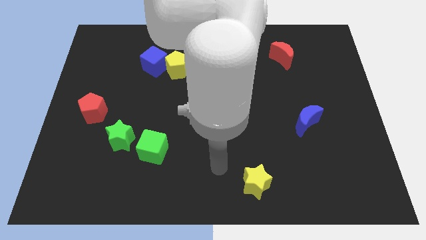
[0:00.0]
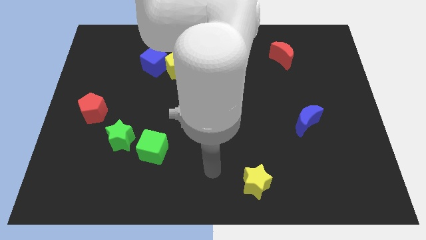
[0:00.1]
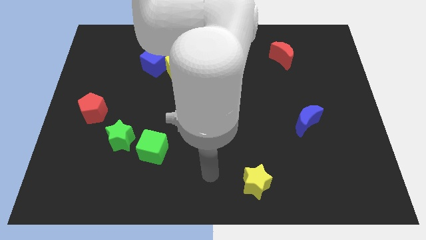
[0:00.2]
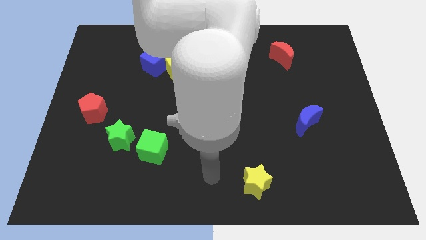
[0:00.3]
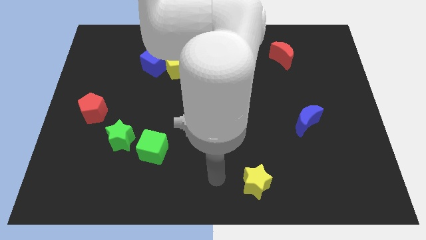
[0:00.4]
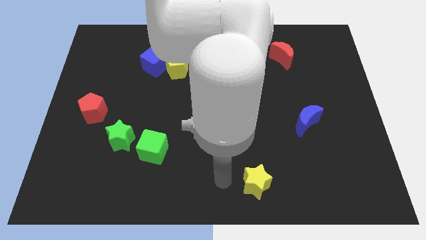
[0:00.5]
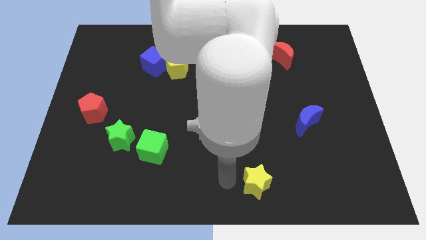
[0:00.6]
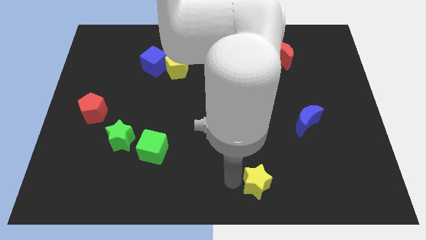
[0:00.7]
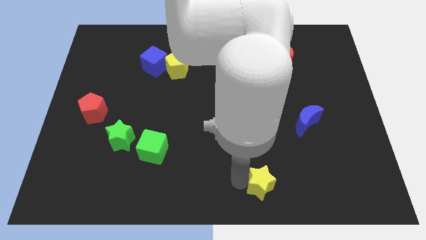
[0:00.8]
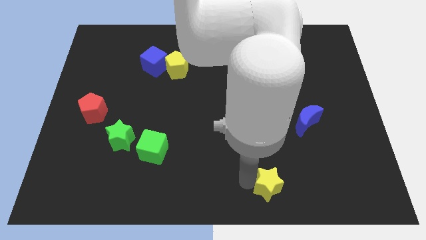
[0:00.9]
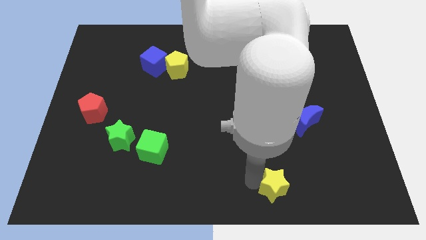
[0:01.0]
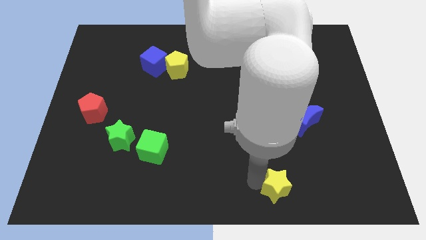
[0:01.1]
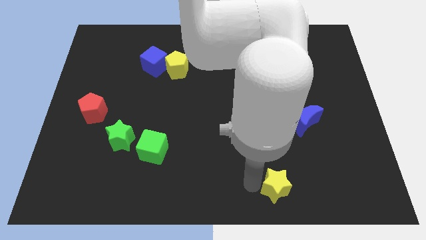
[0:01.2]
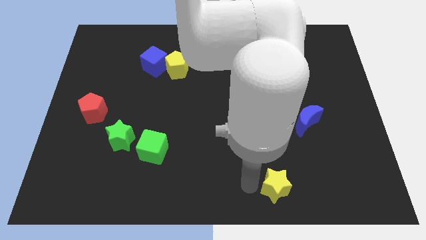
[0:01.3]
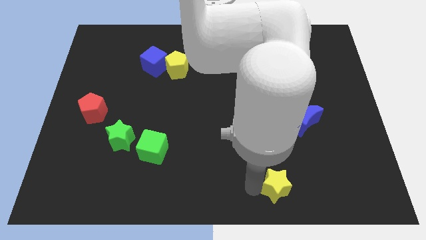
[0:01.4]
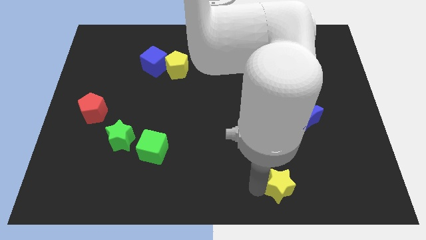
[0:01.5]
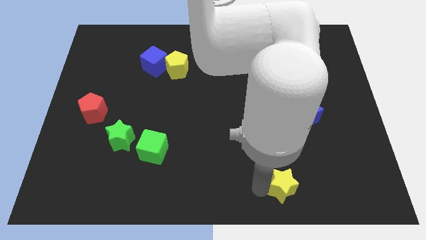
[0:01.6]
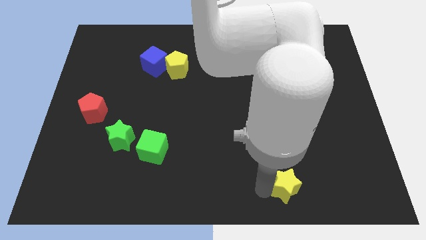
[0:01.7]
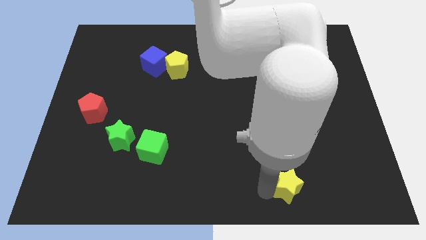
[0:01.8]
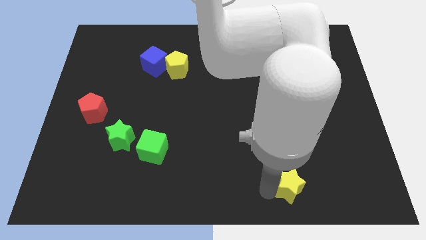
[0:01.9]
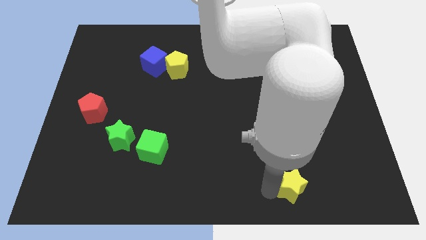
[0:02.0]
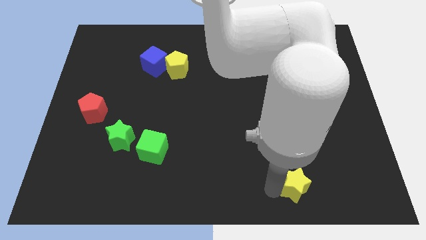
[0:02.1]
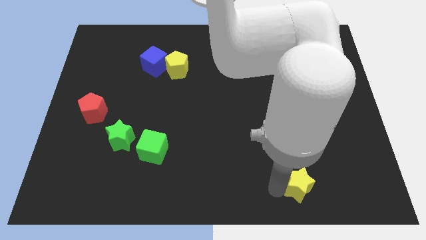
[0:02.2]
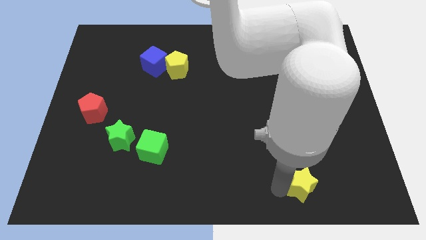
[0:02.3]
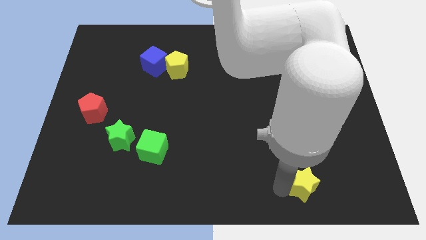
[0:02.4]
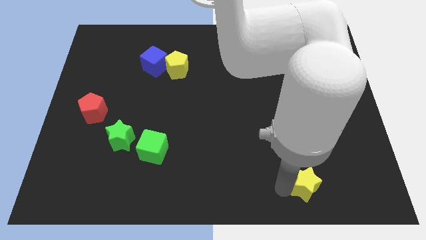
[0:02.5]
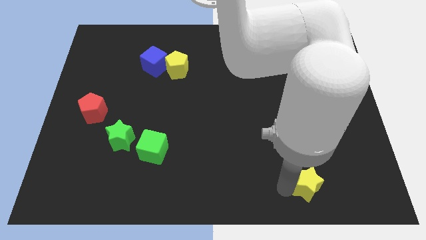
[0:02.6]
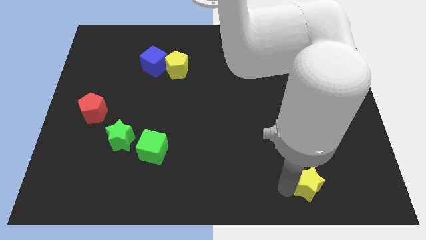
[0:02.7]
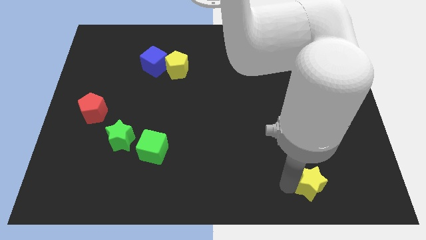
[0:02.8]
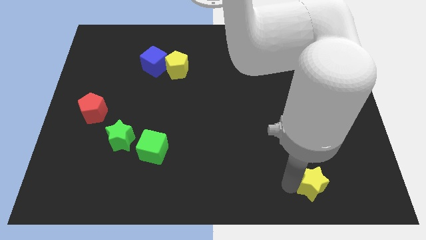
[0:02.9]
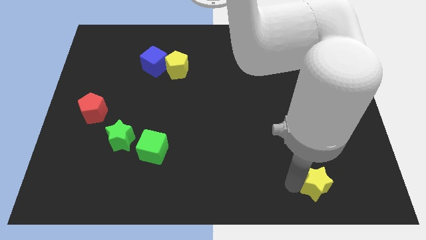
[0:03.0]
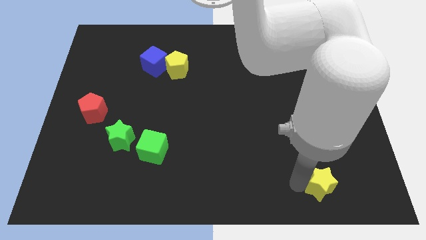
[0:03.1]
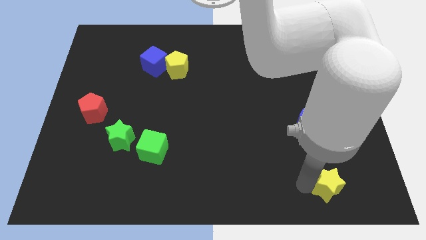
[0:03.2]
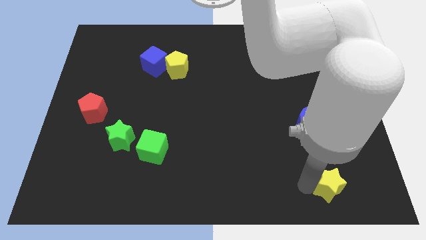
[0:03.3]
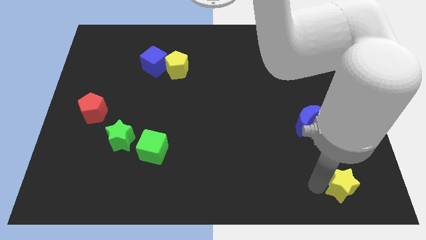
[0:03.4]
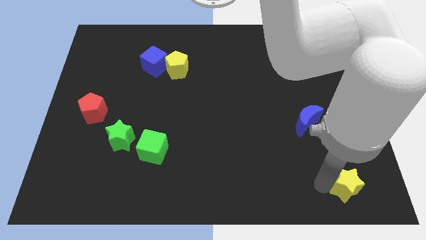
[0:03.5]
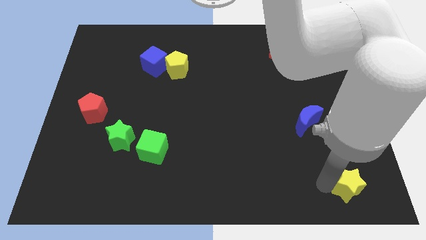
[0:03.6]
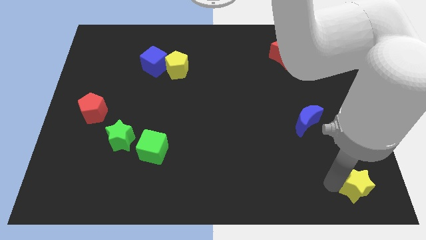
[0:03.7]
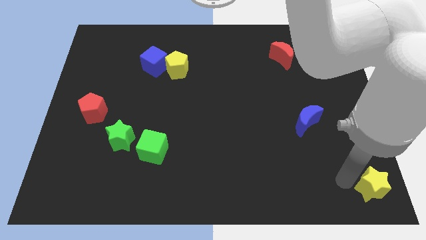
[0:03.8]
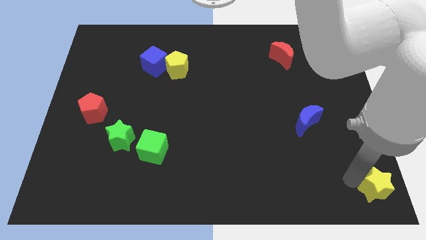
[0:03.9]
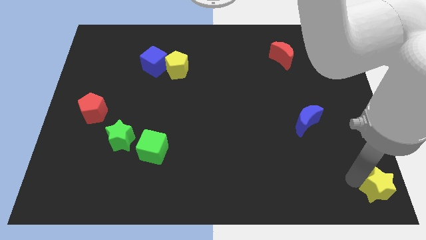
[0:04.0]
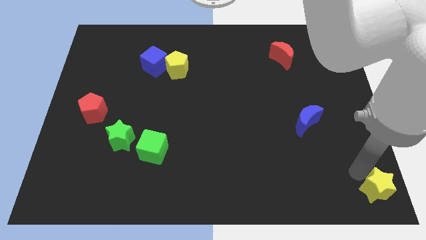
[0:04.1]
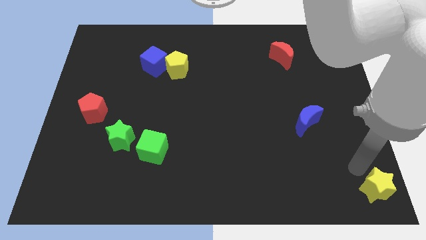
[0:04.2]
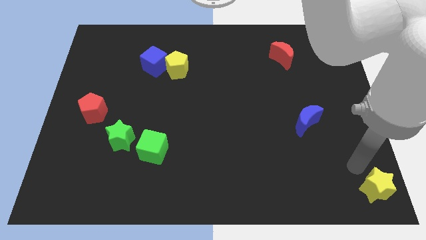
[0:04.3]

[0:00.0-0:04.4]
push yellow star towards the right bottom corner of the board

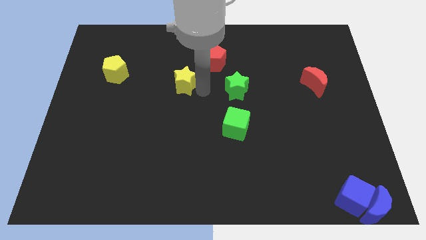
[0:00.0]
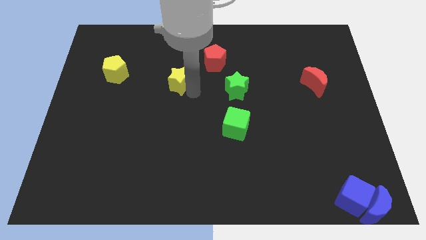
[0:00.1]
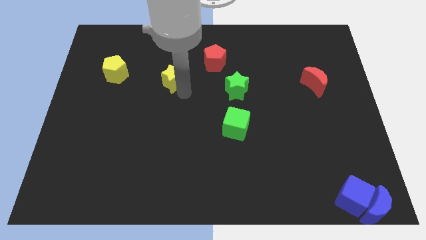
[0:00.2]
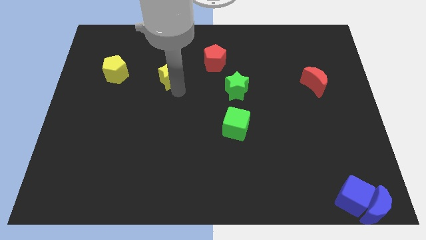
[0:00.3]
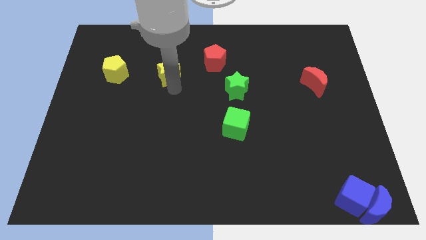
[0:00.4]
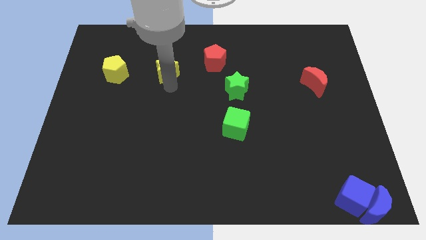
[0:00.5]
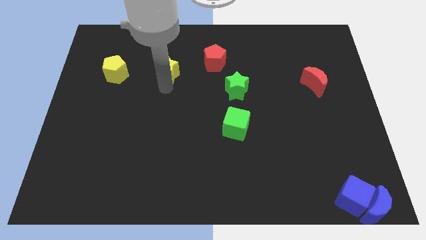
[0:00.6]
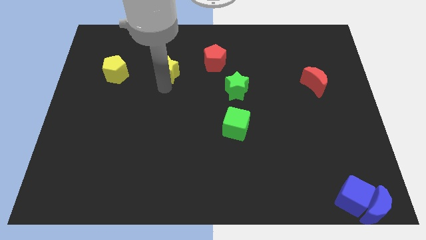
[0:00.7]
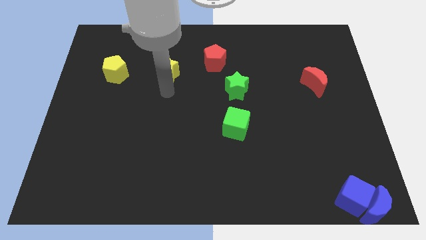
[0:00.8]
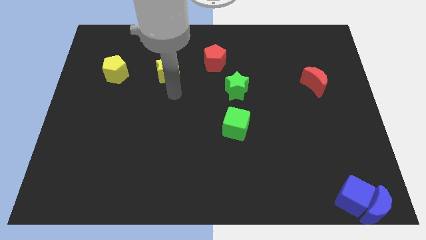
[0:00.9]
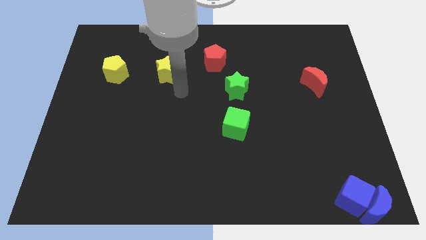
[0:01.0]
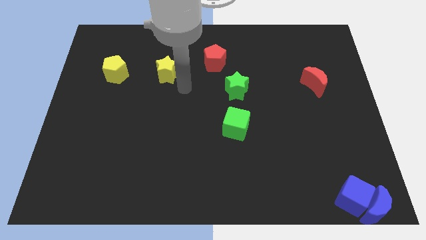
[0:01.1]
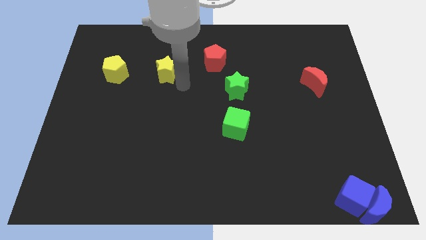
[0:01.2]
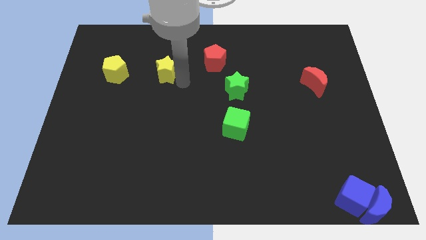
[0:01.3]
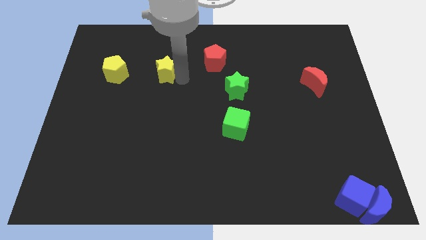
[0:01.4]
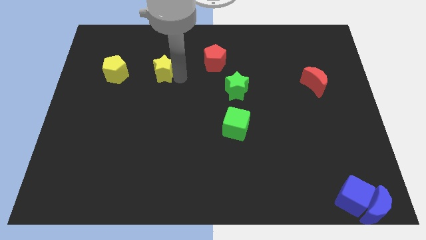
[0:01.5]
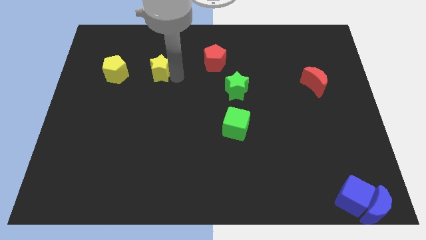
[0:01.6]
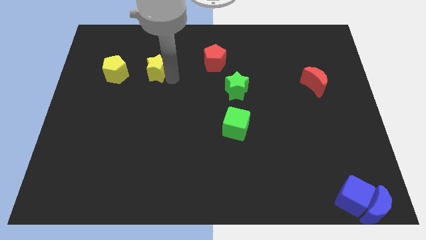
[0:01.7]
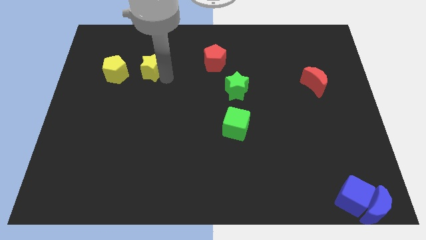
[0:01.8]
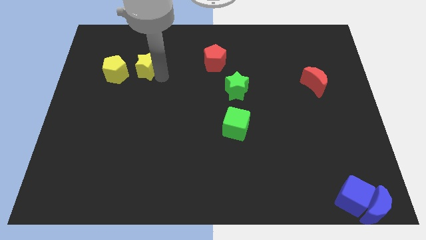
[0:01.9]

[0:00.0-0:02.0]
push the yellow star to the parallel right of the yellow pentagon

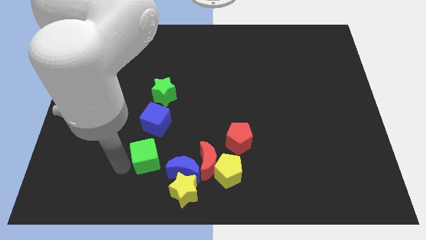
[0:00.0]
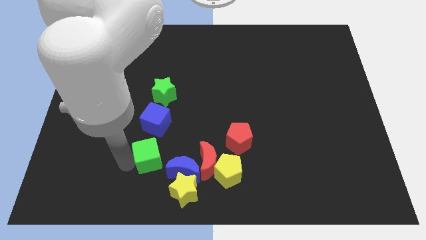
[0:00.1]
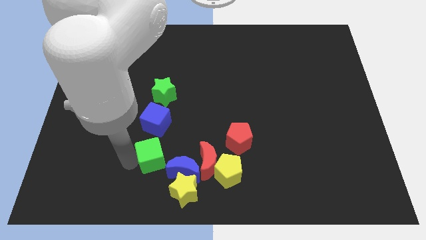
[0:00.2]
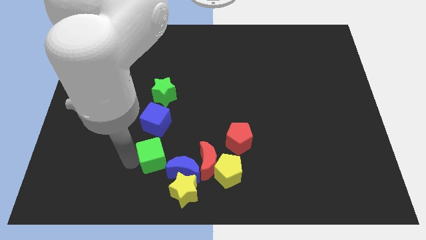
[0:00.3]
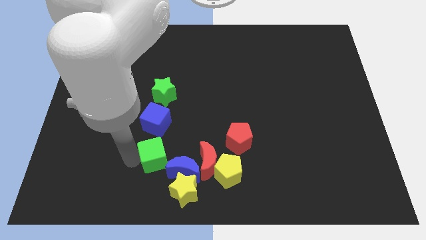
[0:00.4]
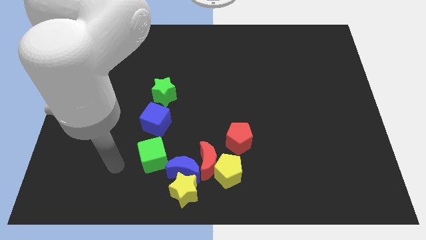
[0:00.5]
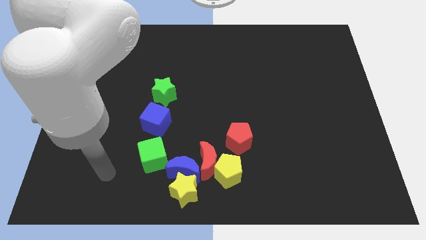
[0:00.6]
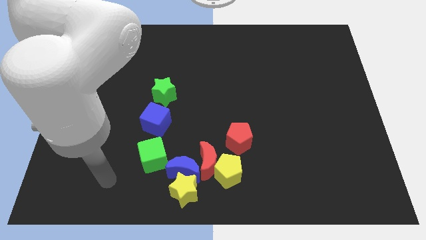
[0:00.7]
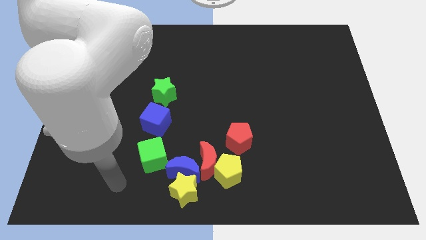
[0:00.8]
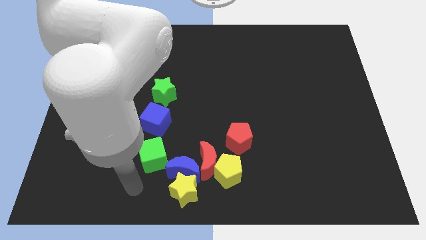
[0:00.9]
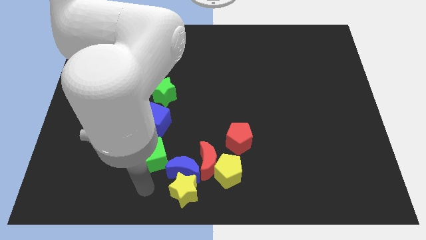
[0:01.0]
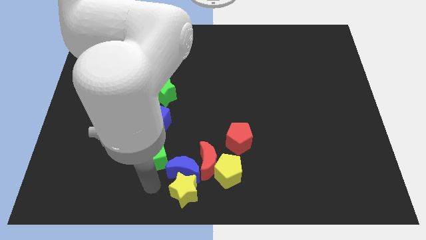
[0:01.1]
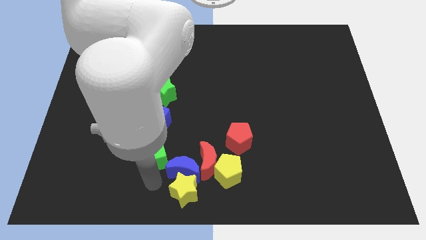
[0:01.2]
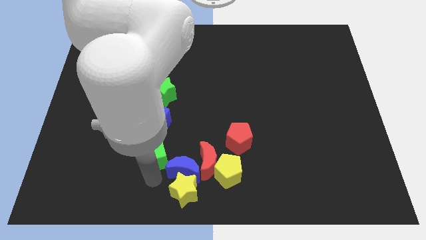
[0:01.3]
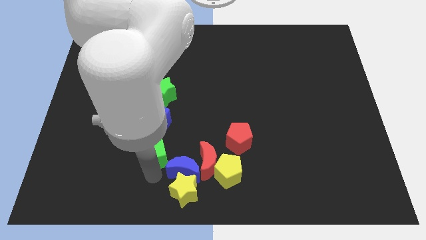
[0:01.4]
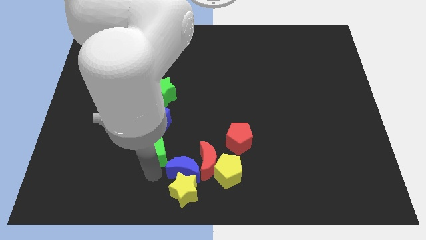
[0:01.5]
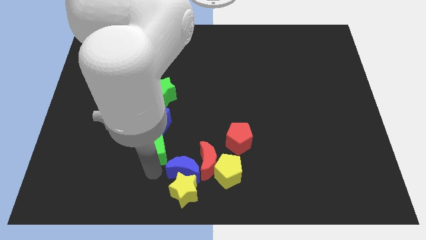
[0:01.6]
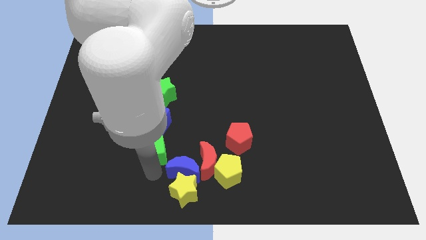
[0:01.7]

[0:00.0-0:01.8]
push the green cube slightly upward

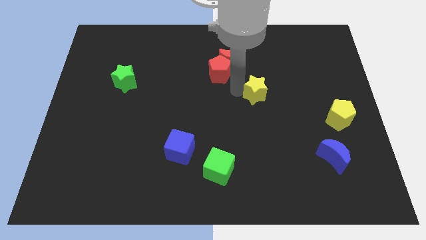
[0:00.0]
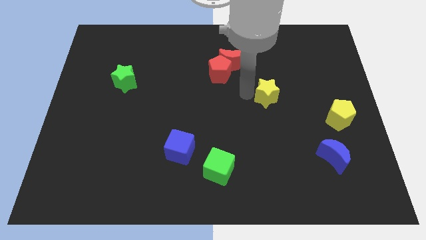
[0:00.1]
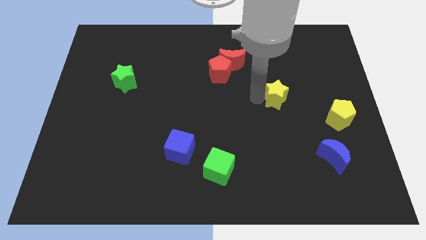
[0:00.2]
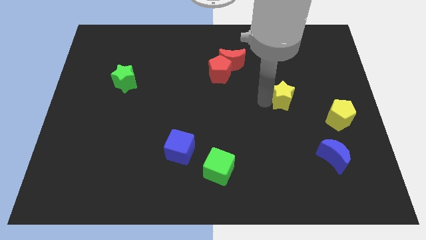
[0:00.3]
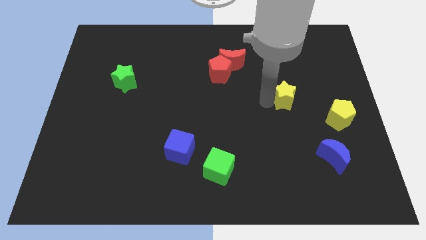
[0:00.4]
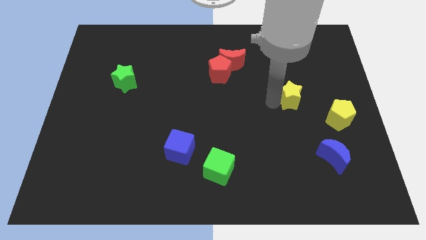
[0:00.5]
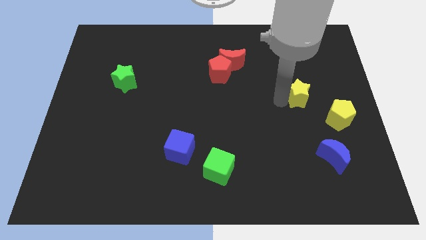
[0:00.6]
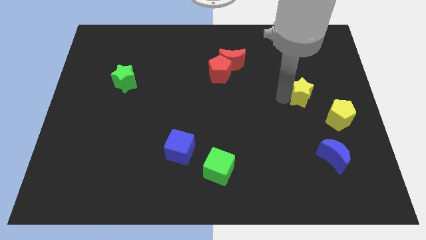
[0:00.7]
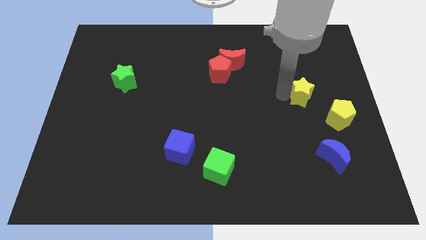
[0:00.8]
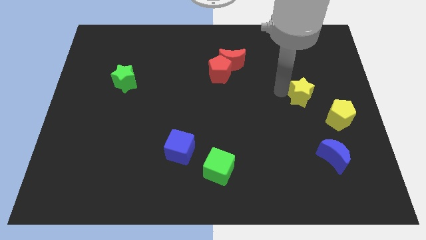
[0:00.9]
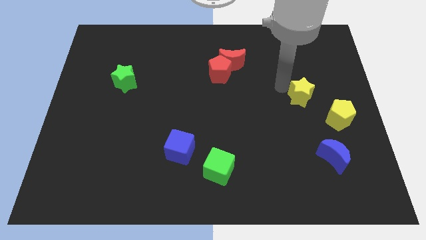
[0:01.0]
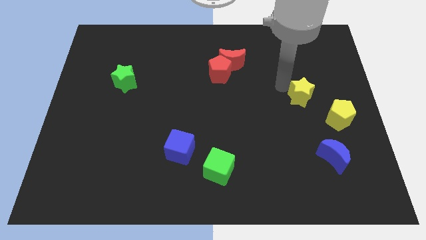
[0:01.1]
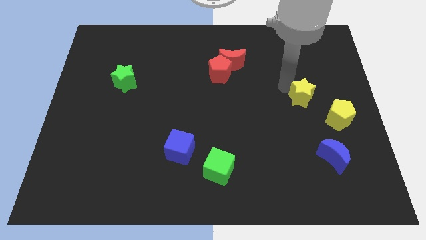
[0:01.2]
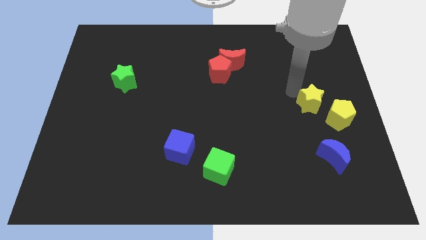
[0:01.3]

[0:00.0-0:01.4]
move the yellow star to the yellow pentagon
